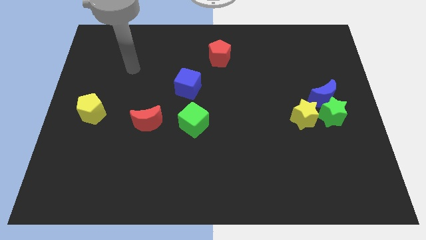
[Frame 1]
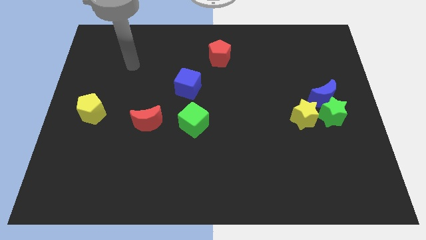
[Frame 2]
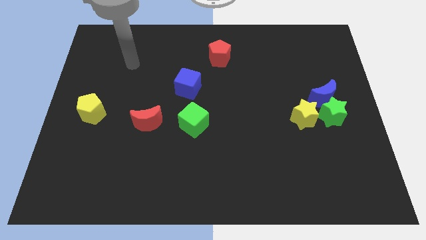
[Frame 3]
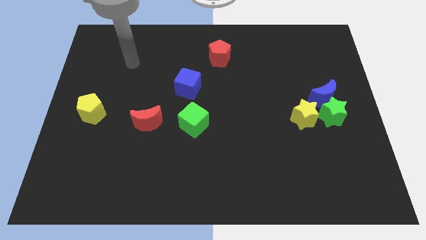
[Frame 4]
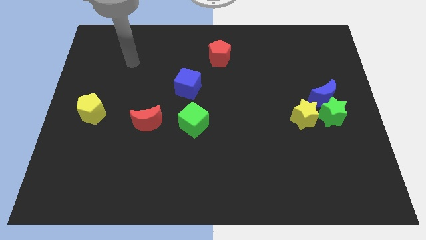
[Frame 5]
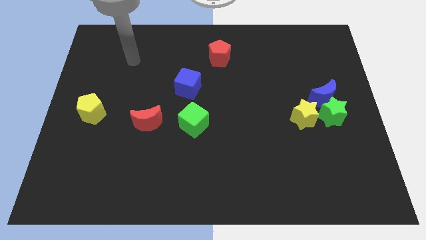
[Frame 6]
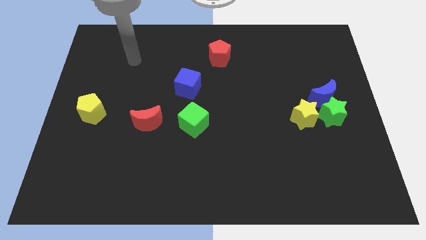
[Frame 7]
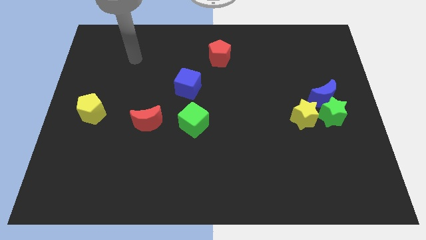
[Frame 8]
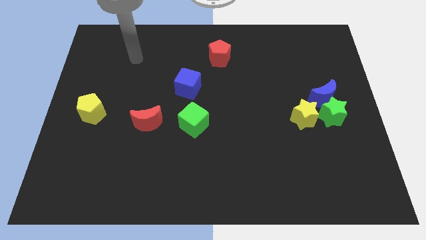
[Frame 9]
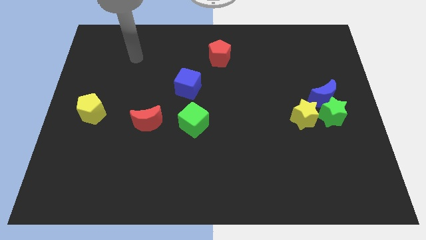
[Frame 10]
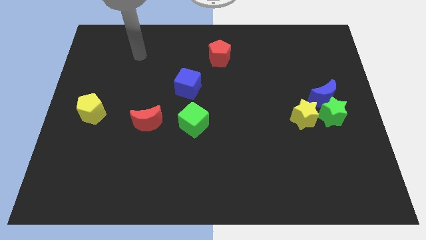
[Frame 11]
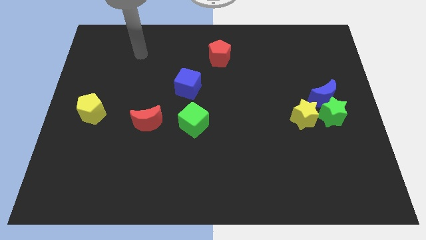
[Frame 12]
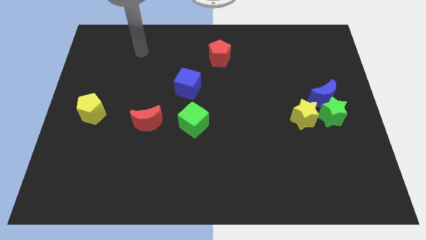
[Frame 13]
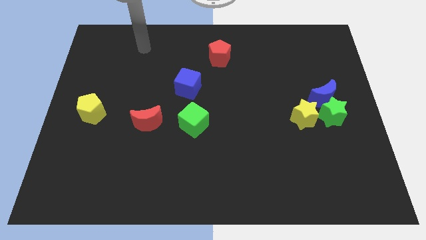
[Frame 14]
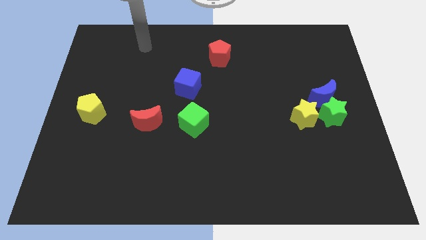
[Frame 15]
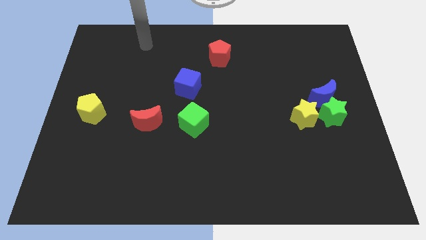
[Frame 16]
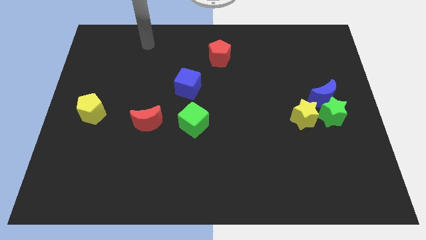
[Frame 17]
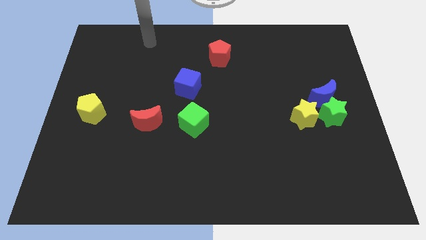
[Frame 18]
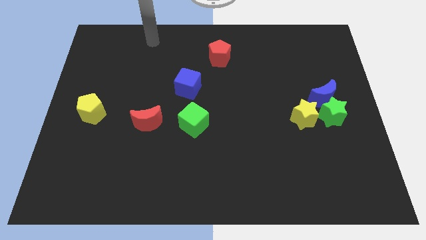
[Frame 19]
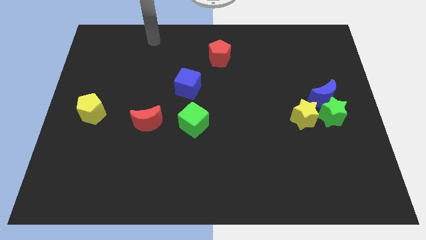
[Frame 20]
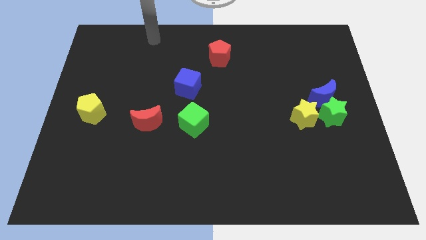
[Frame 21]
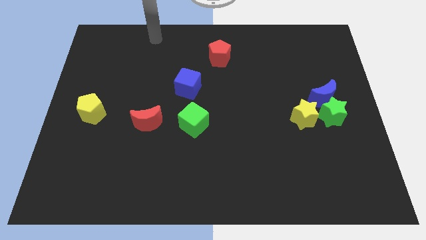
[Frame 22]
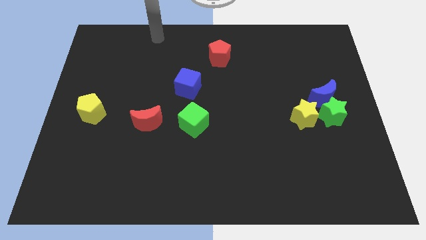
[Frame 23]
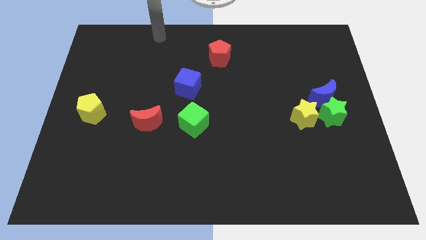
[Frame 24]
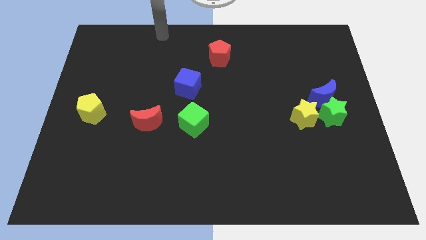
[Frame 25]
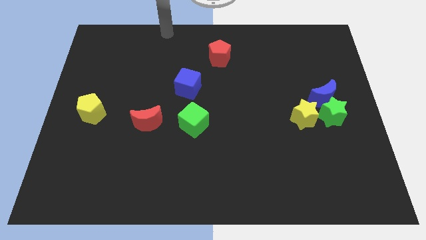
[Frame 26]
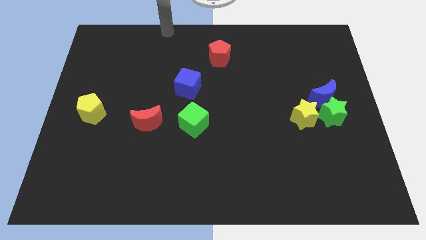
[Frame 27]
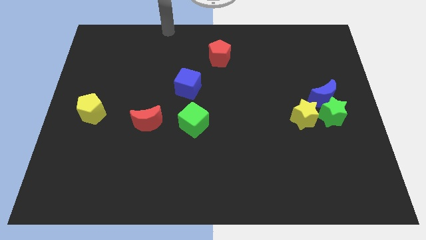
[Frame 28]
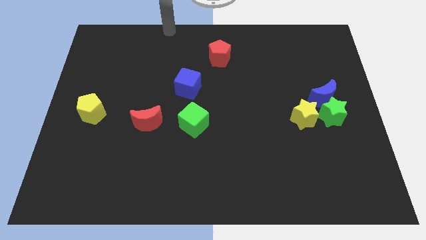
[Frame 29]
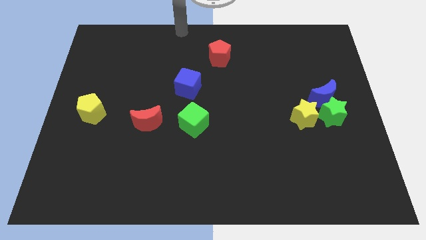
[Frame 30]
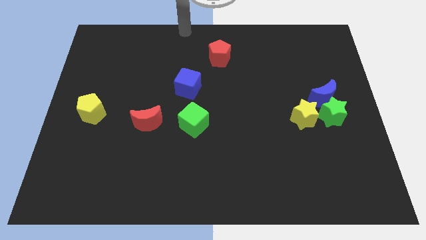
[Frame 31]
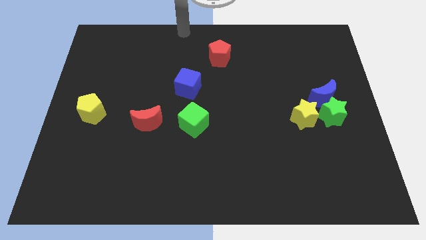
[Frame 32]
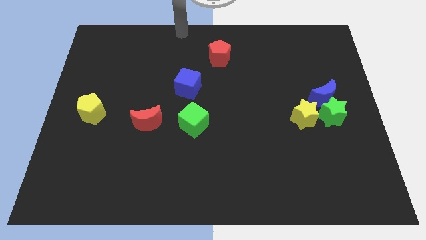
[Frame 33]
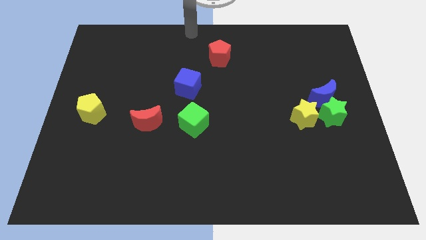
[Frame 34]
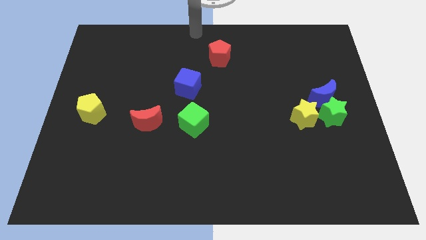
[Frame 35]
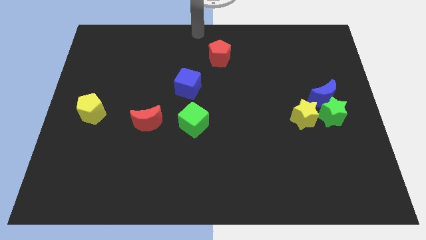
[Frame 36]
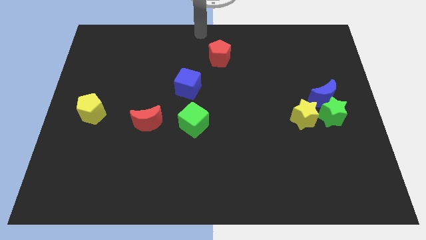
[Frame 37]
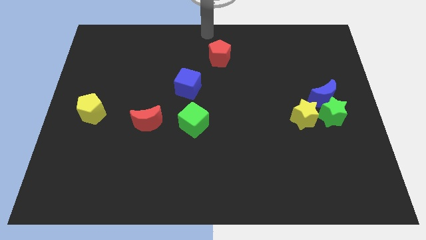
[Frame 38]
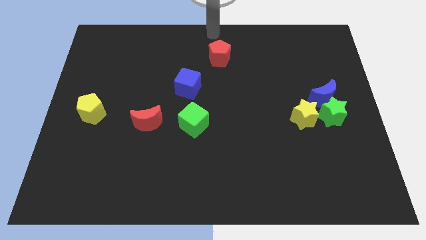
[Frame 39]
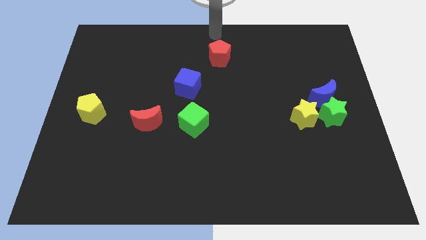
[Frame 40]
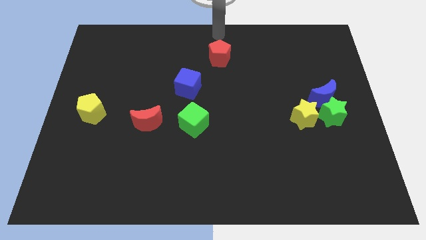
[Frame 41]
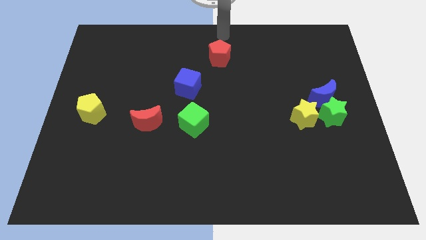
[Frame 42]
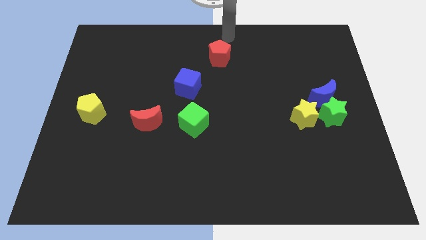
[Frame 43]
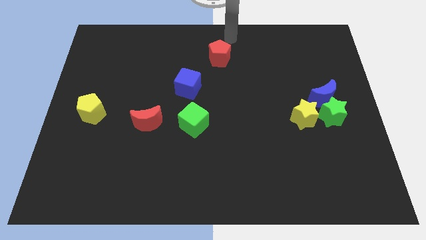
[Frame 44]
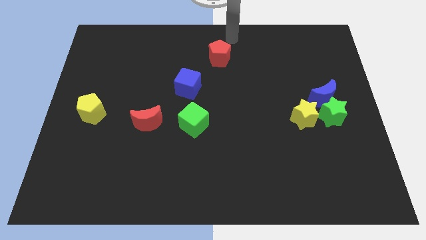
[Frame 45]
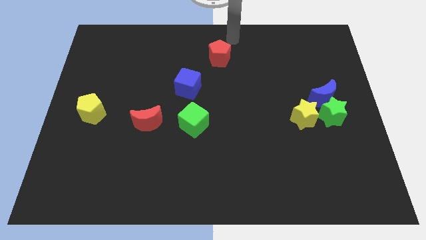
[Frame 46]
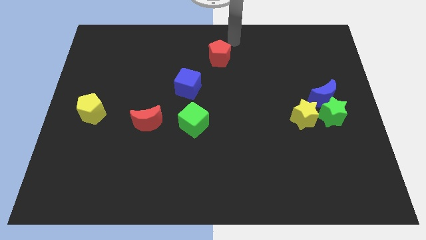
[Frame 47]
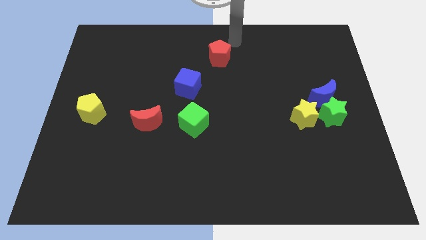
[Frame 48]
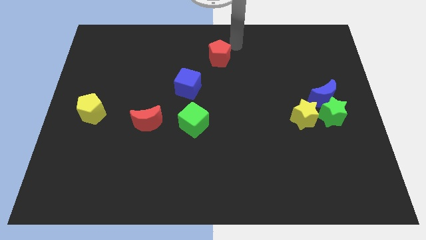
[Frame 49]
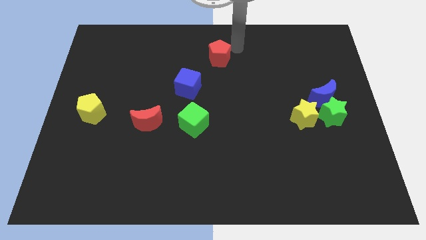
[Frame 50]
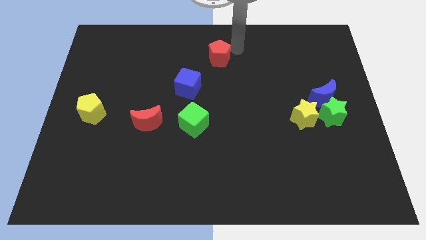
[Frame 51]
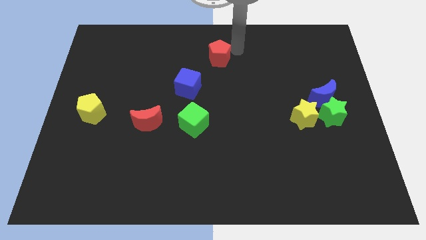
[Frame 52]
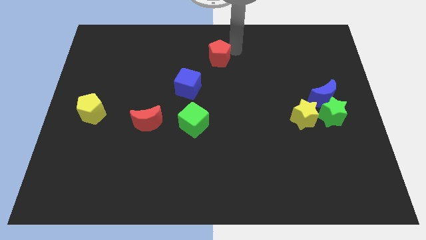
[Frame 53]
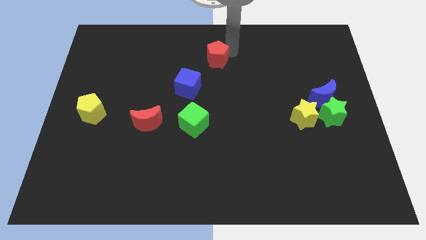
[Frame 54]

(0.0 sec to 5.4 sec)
touch the right side red pentagon

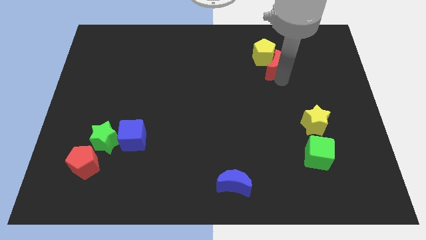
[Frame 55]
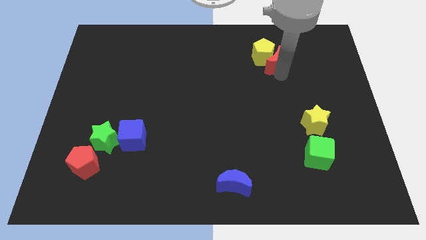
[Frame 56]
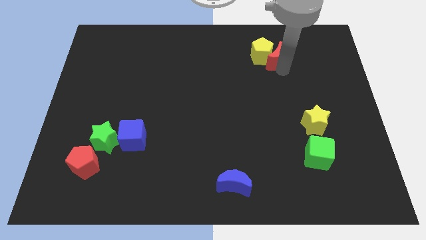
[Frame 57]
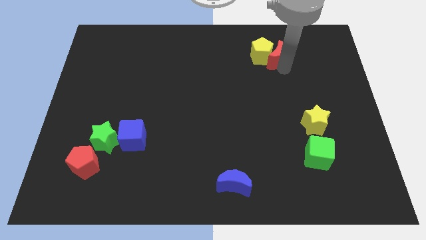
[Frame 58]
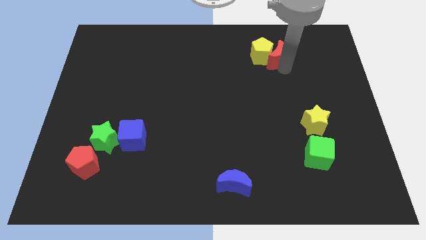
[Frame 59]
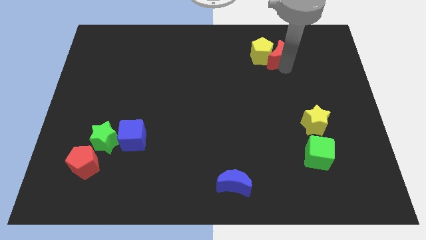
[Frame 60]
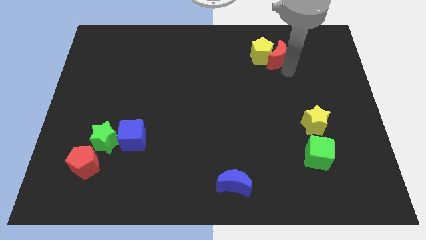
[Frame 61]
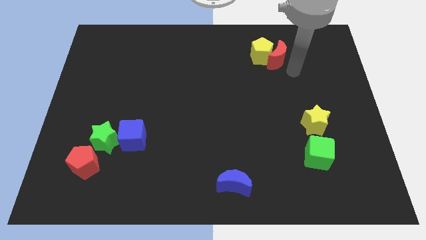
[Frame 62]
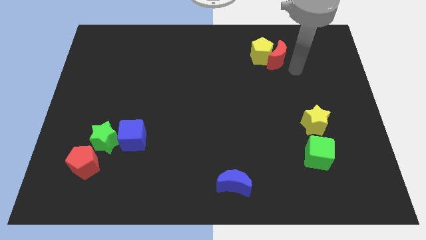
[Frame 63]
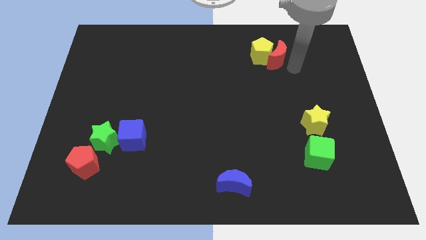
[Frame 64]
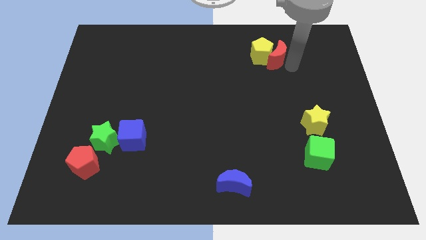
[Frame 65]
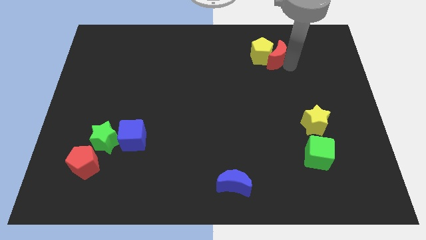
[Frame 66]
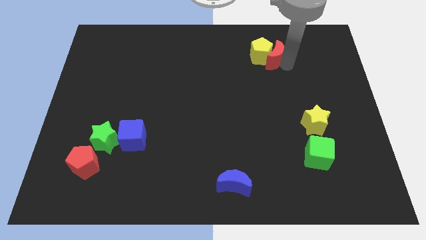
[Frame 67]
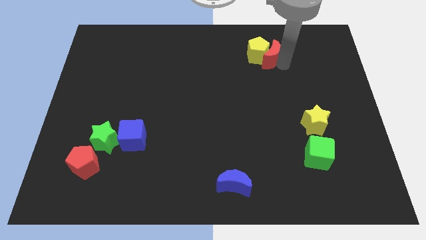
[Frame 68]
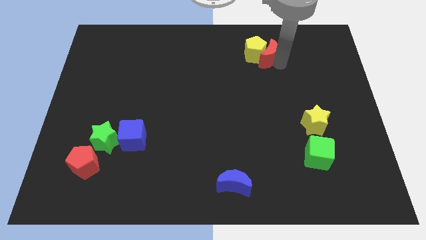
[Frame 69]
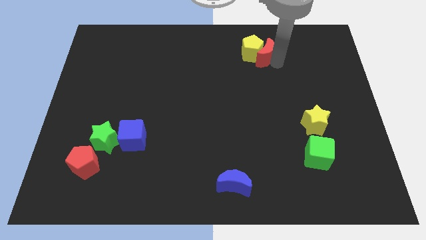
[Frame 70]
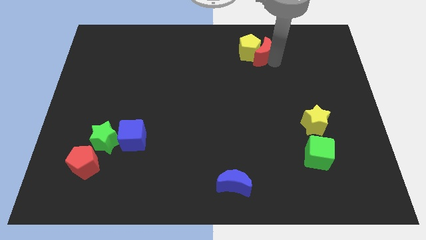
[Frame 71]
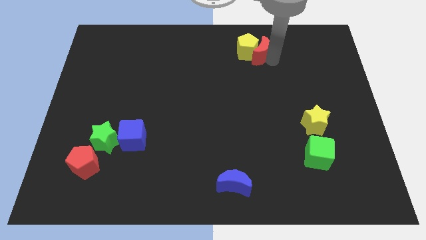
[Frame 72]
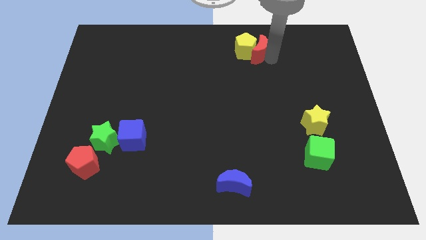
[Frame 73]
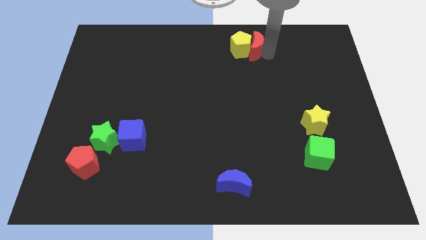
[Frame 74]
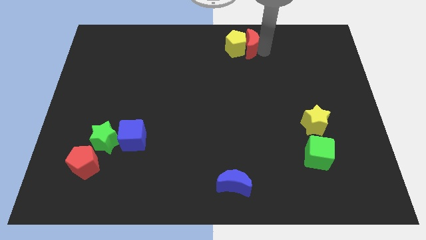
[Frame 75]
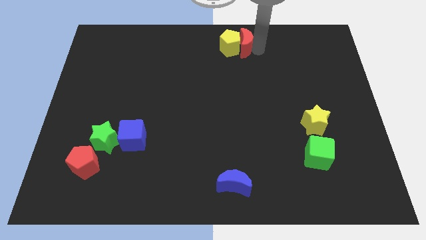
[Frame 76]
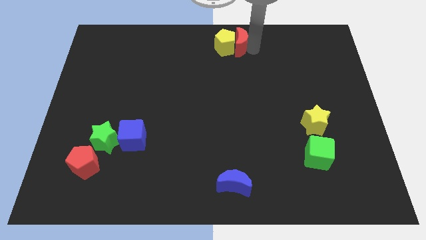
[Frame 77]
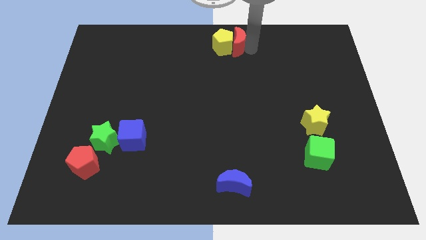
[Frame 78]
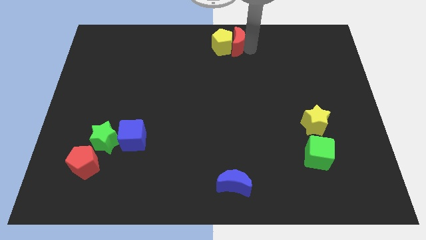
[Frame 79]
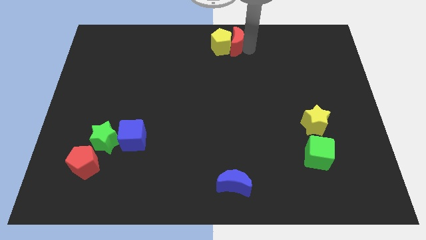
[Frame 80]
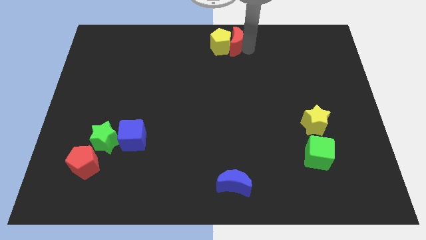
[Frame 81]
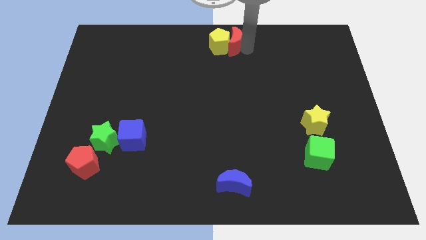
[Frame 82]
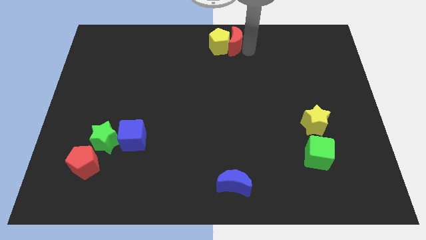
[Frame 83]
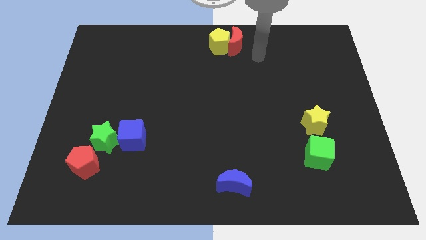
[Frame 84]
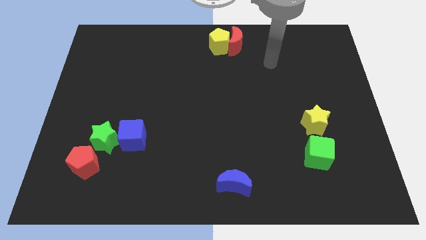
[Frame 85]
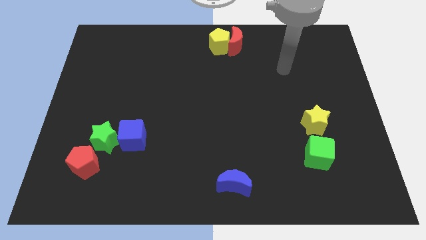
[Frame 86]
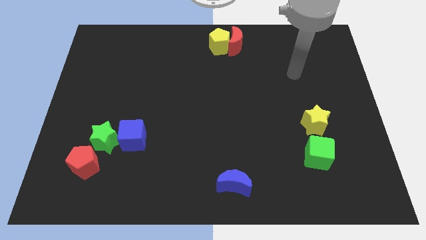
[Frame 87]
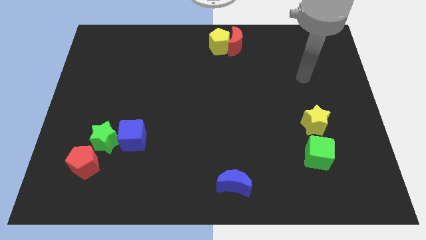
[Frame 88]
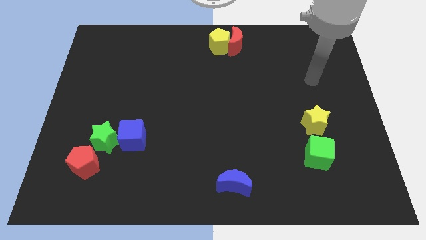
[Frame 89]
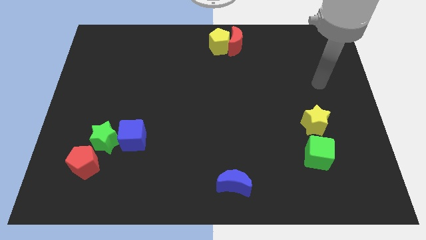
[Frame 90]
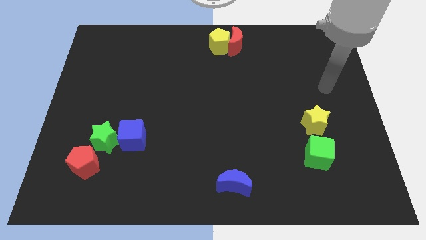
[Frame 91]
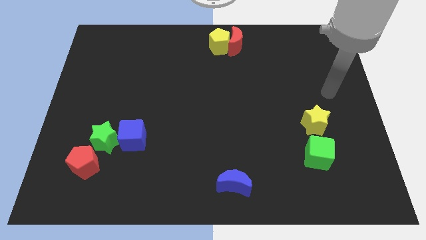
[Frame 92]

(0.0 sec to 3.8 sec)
push the yellow pentagon with red moon to the top center
